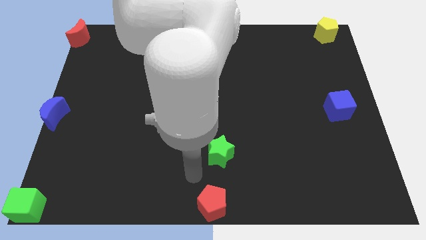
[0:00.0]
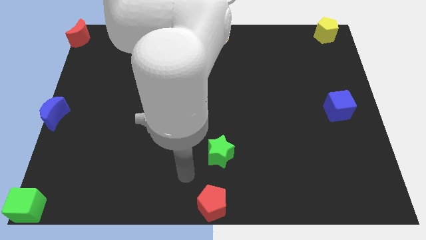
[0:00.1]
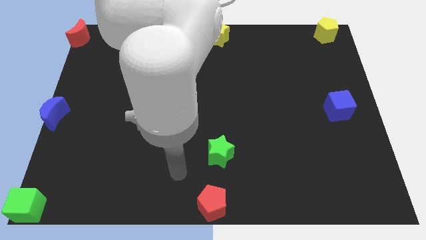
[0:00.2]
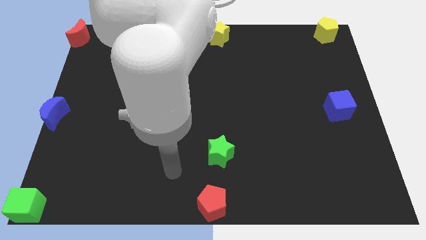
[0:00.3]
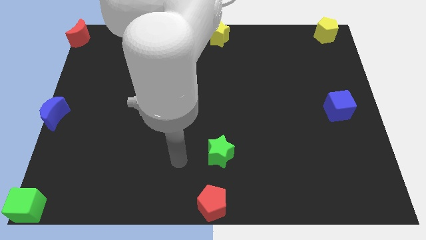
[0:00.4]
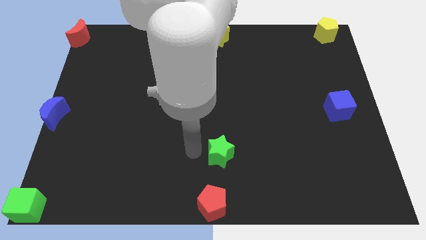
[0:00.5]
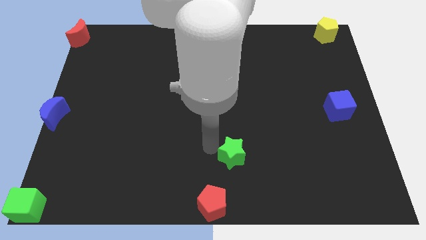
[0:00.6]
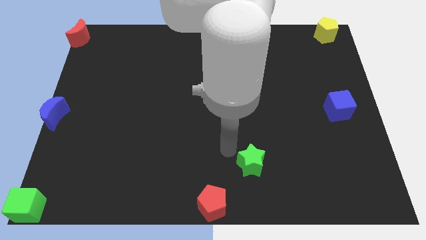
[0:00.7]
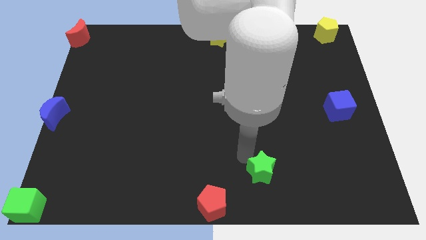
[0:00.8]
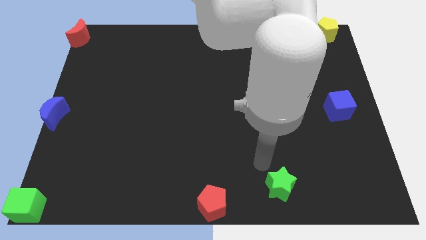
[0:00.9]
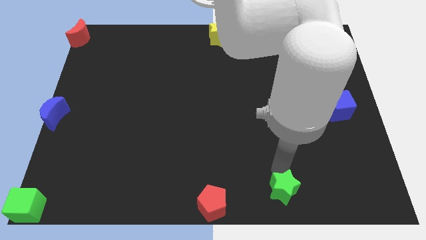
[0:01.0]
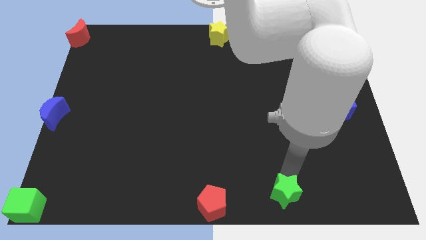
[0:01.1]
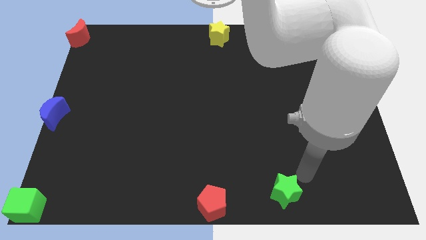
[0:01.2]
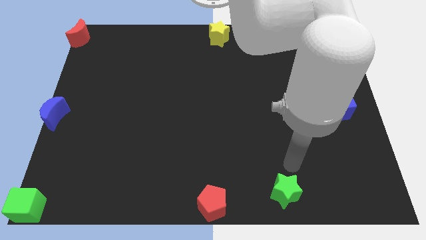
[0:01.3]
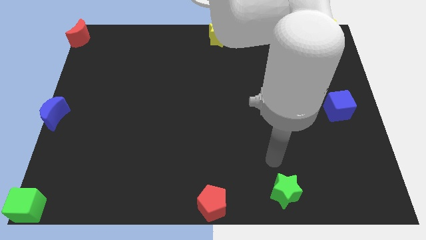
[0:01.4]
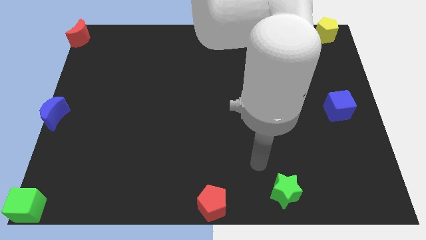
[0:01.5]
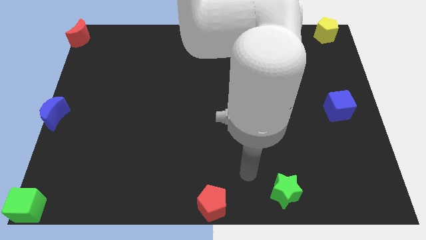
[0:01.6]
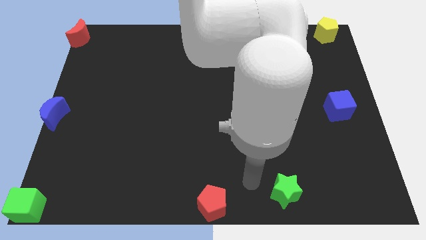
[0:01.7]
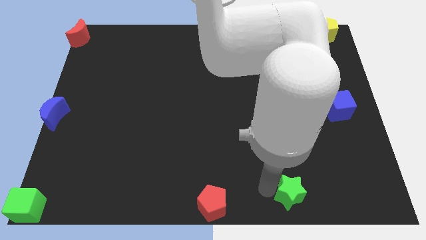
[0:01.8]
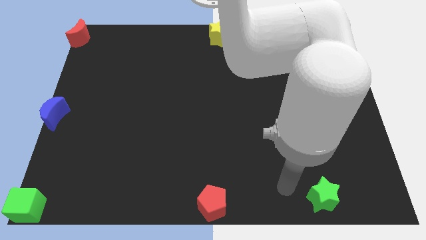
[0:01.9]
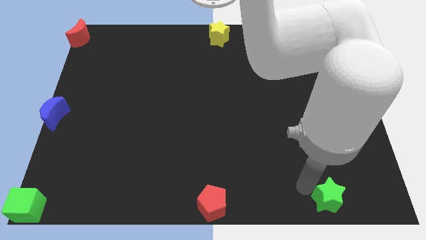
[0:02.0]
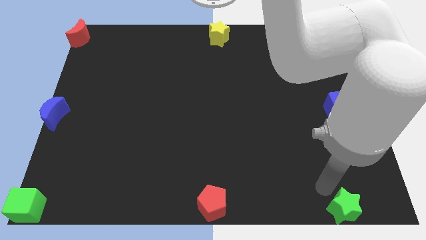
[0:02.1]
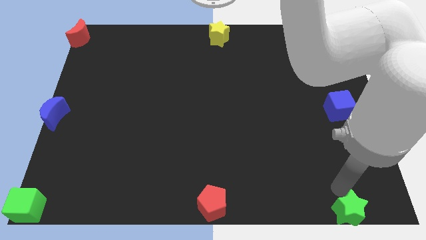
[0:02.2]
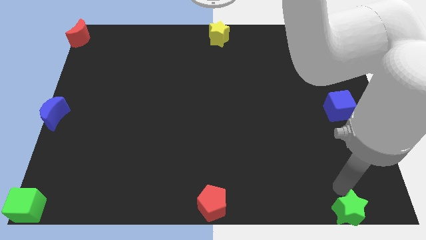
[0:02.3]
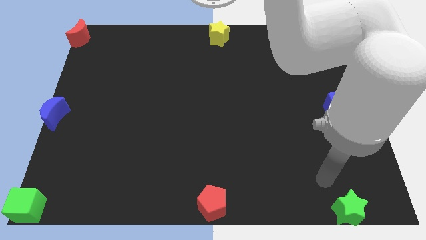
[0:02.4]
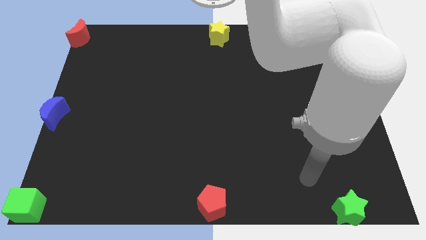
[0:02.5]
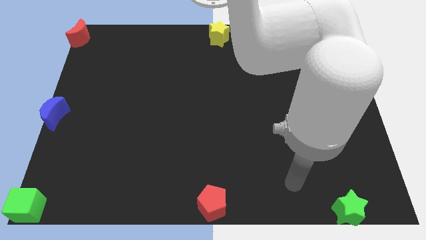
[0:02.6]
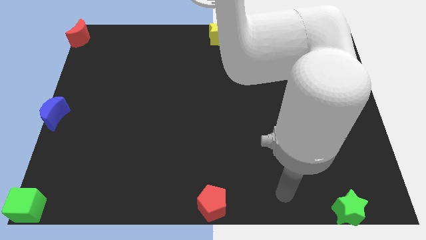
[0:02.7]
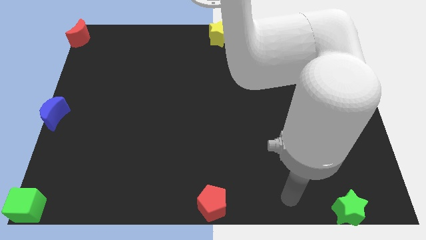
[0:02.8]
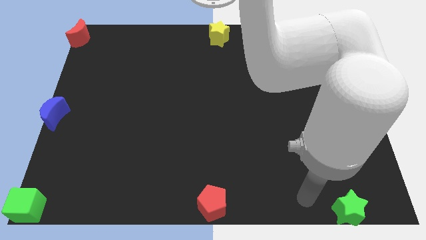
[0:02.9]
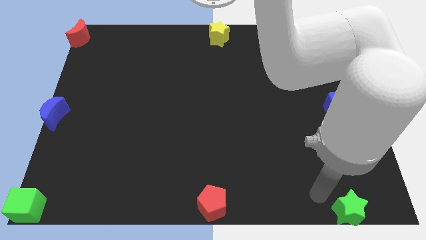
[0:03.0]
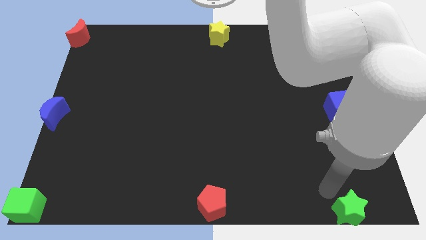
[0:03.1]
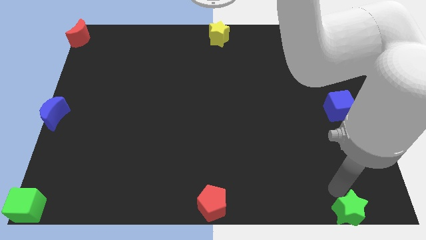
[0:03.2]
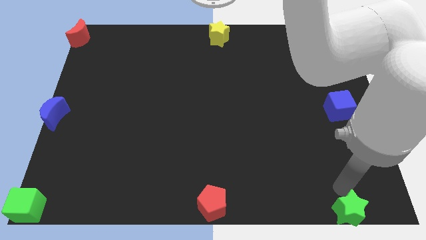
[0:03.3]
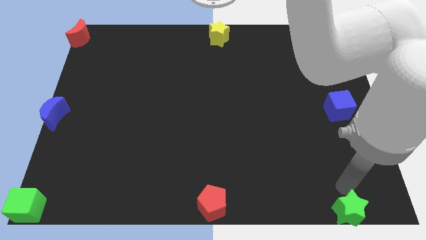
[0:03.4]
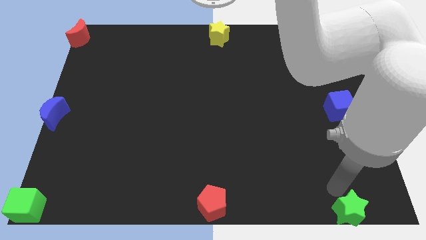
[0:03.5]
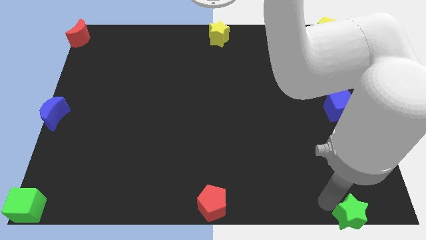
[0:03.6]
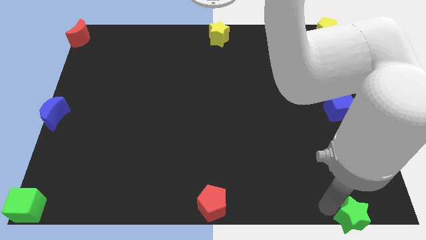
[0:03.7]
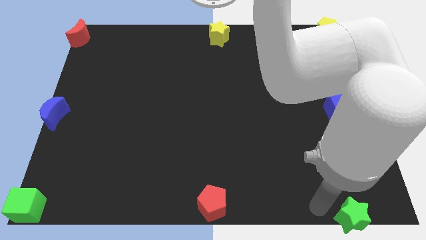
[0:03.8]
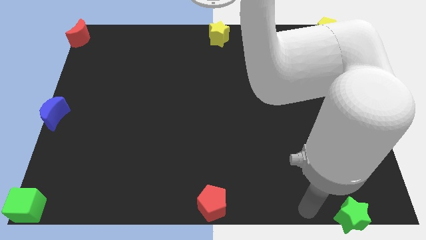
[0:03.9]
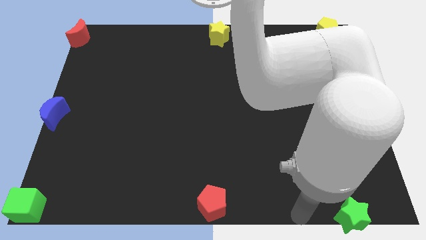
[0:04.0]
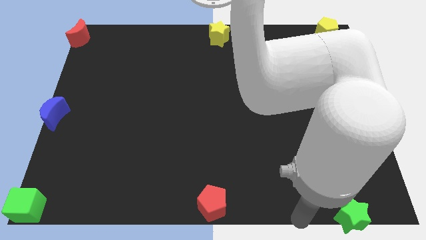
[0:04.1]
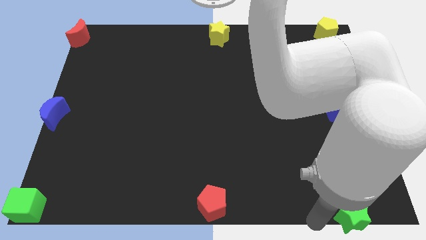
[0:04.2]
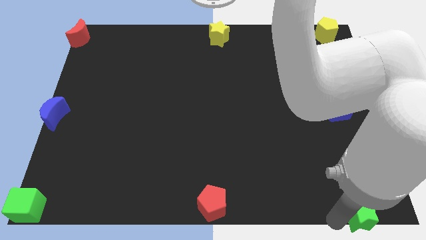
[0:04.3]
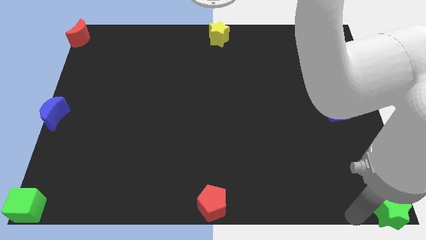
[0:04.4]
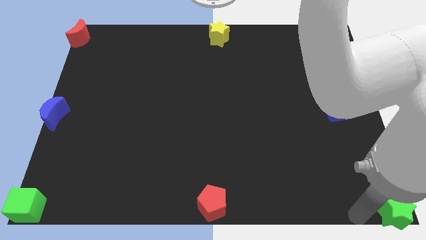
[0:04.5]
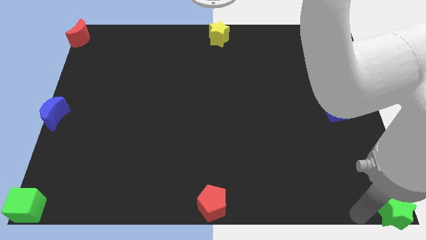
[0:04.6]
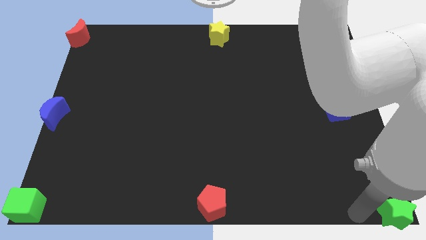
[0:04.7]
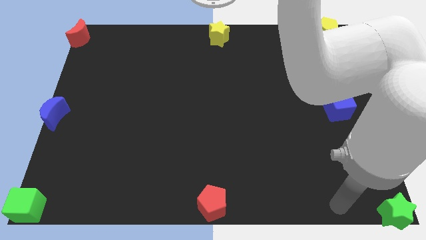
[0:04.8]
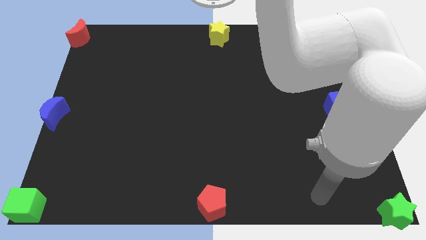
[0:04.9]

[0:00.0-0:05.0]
push the green star to the bottom right to the board

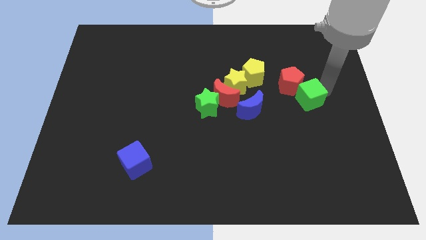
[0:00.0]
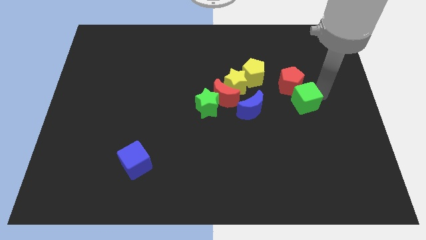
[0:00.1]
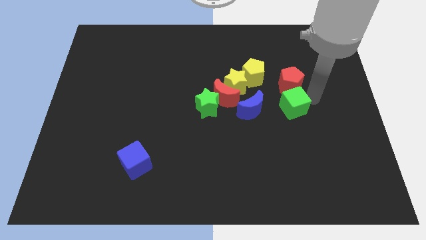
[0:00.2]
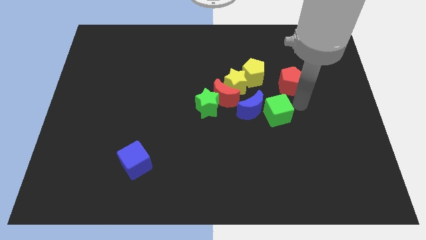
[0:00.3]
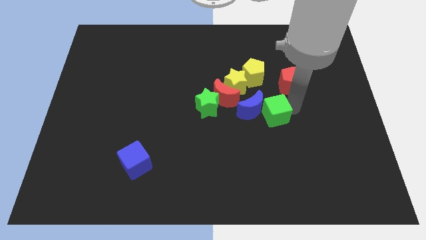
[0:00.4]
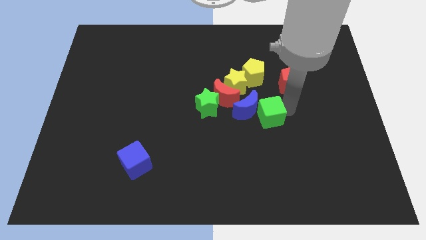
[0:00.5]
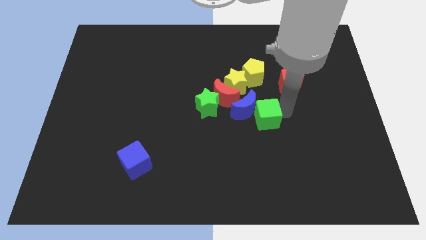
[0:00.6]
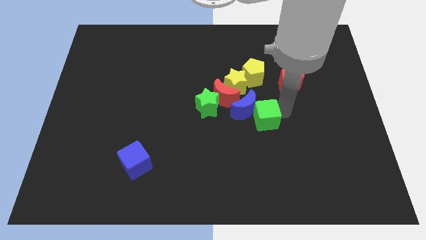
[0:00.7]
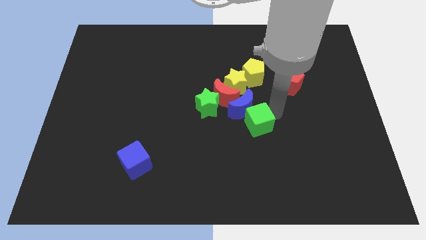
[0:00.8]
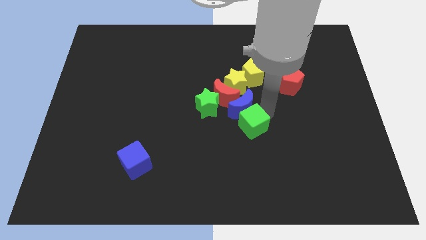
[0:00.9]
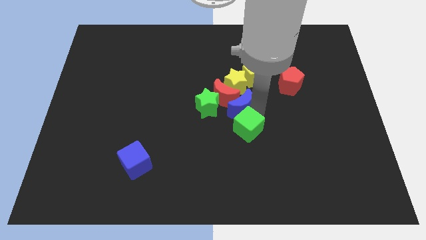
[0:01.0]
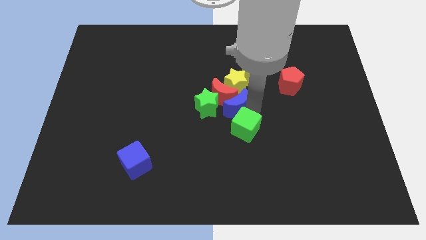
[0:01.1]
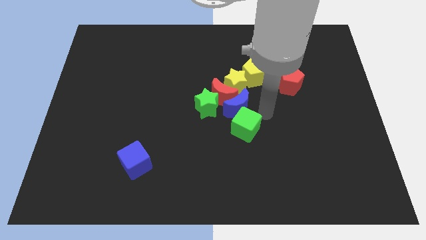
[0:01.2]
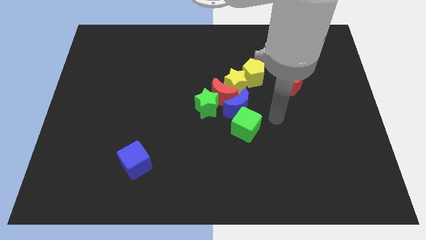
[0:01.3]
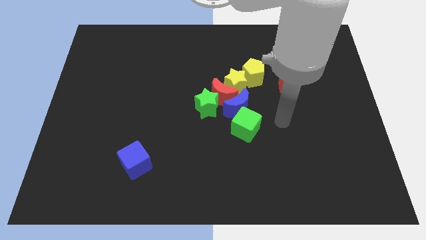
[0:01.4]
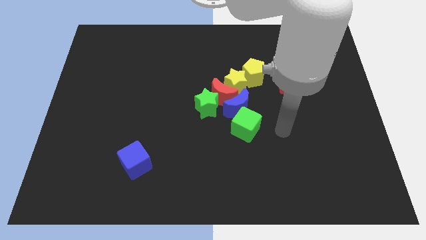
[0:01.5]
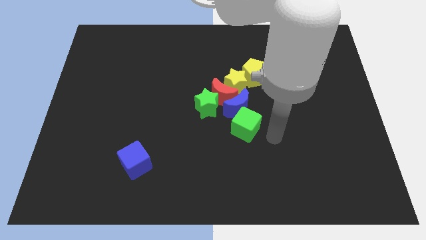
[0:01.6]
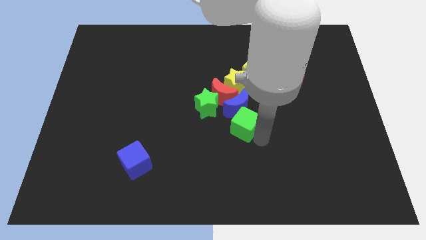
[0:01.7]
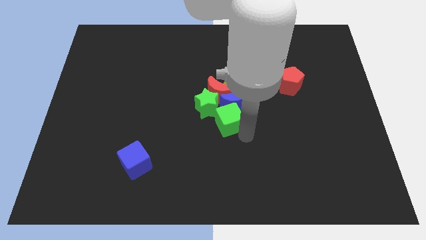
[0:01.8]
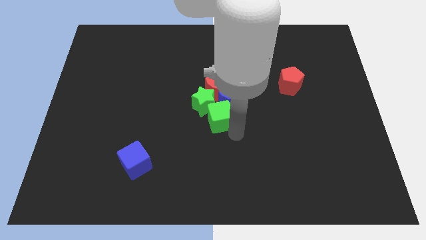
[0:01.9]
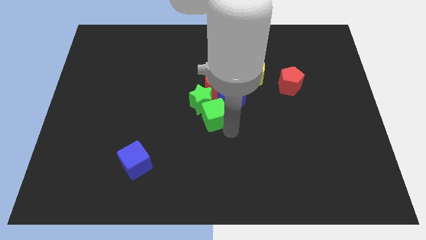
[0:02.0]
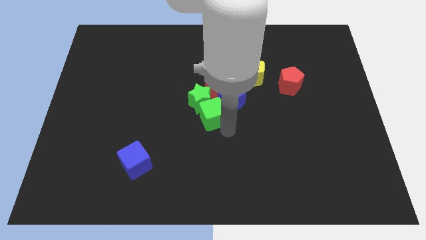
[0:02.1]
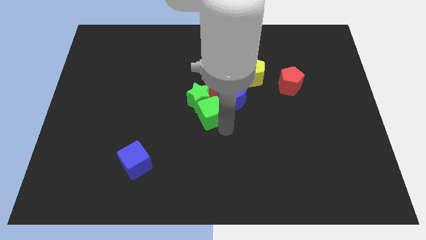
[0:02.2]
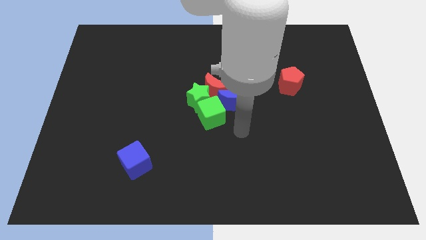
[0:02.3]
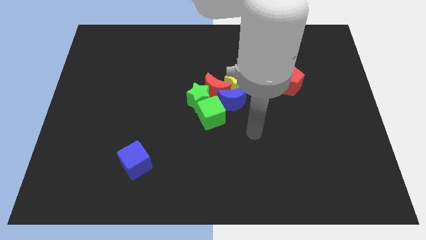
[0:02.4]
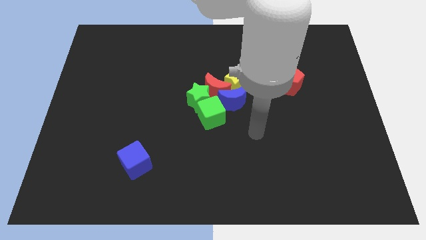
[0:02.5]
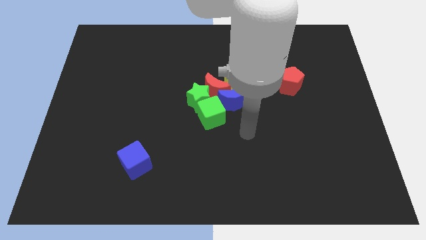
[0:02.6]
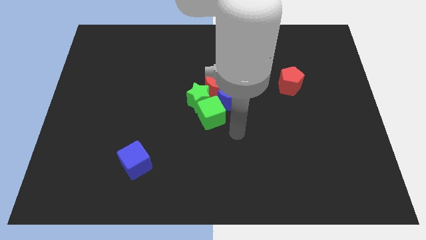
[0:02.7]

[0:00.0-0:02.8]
move the green cube into the green star

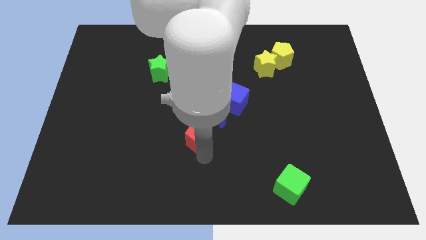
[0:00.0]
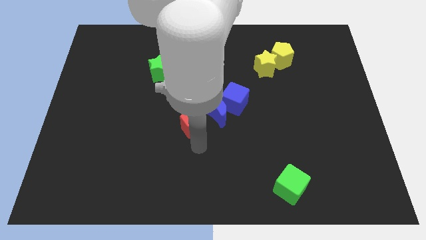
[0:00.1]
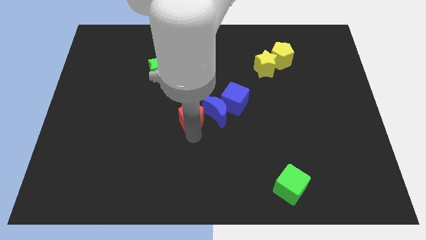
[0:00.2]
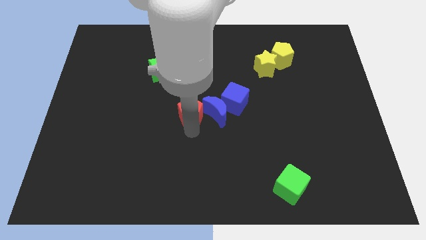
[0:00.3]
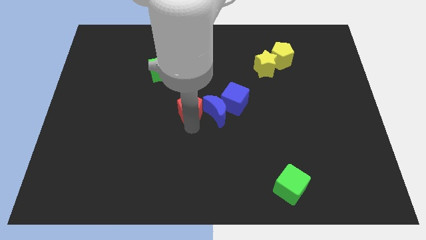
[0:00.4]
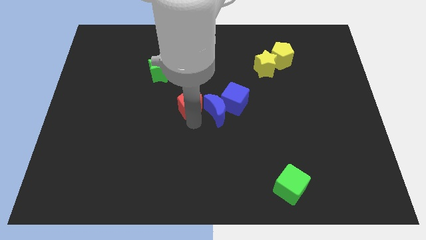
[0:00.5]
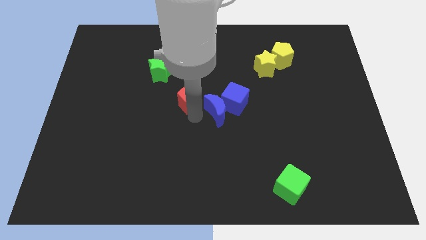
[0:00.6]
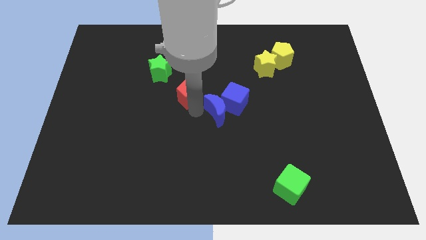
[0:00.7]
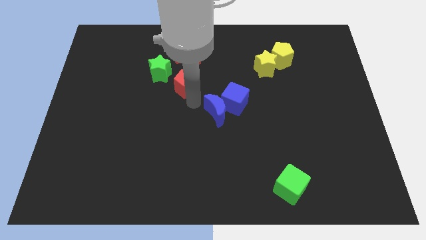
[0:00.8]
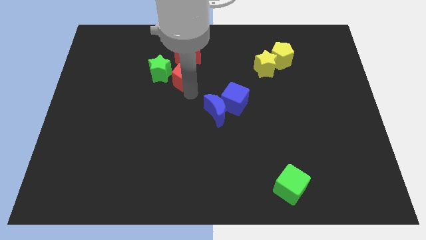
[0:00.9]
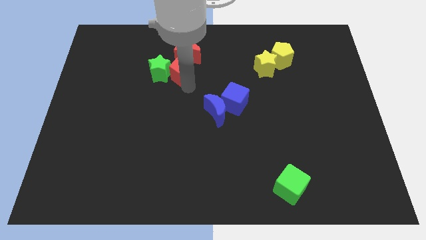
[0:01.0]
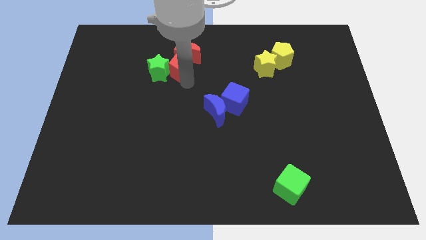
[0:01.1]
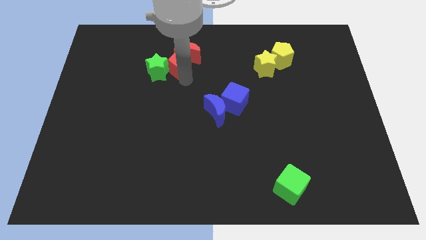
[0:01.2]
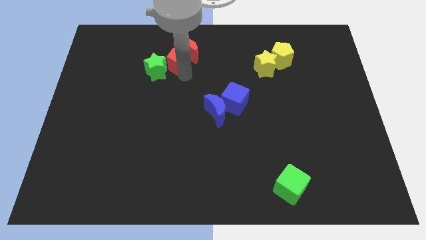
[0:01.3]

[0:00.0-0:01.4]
move the red moon into the red pentagon
